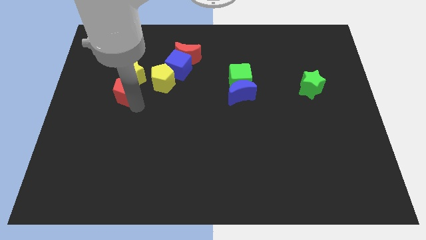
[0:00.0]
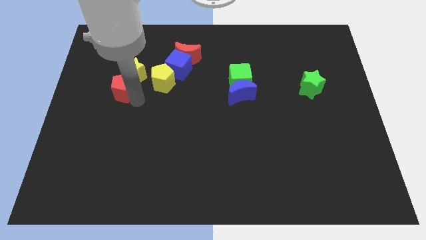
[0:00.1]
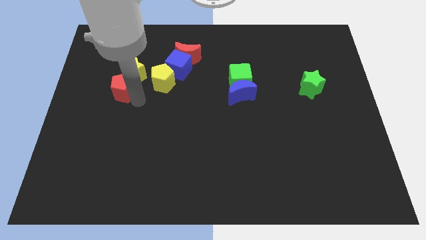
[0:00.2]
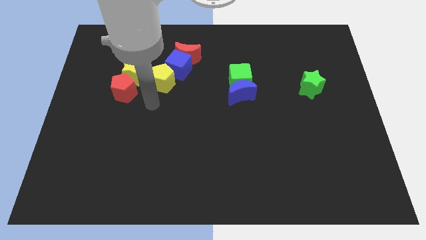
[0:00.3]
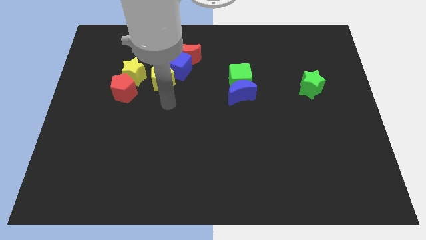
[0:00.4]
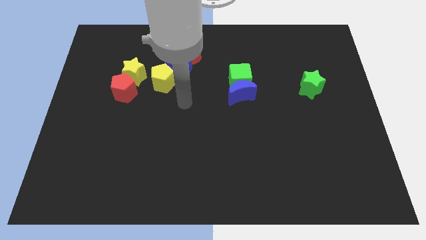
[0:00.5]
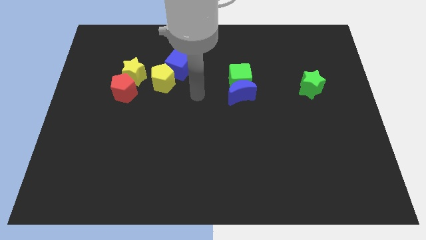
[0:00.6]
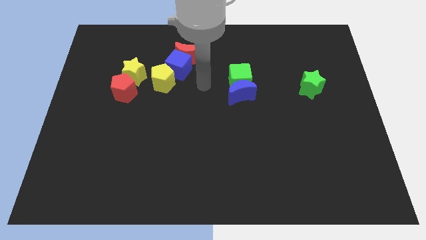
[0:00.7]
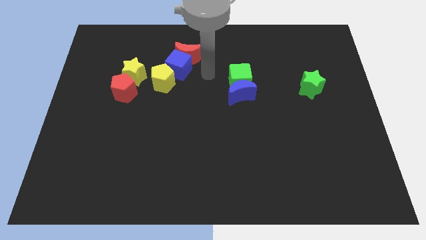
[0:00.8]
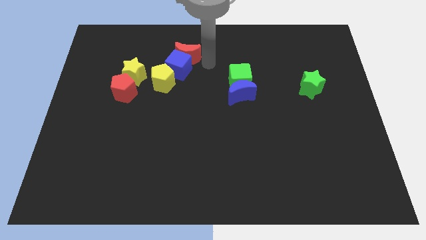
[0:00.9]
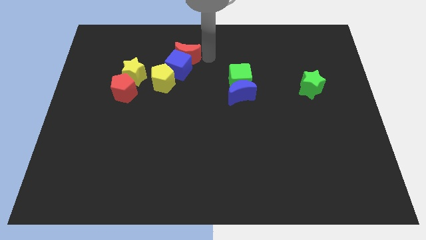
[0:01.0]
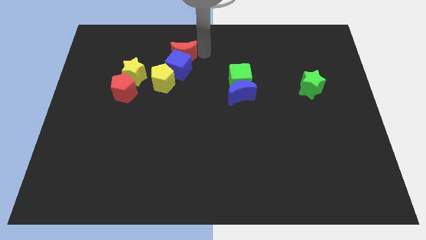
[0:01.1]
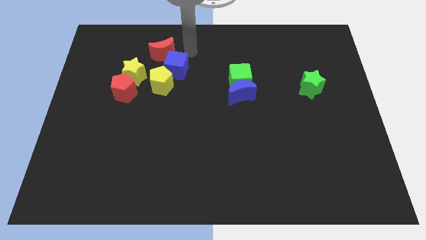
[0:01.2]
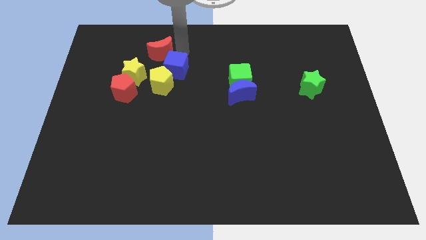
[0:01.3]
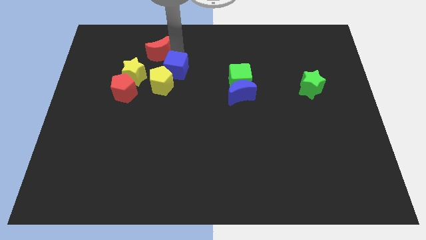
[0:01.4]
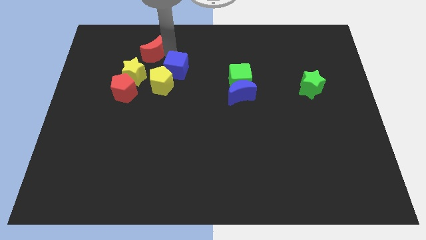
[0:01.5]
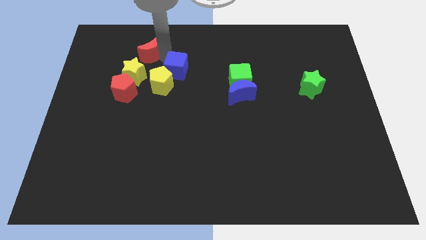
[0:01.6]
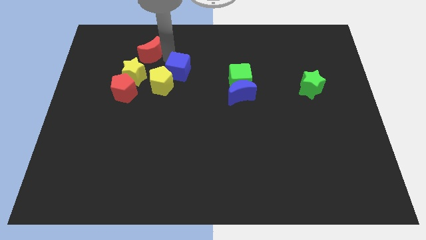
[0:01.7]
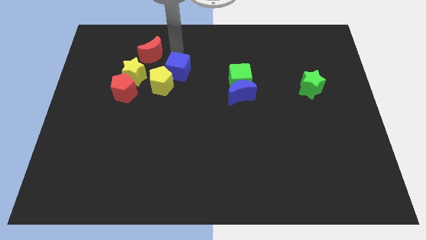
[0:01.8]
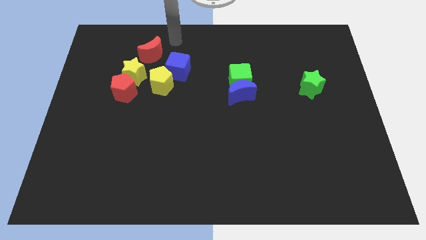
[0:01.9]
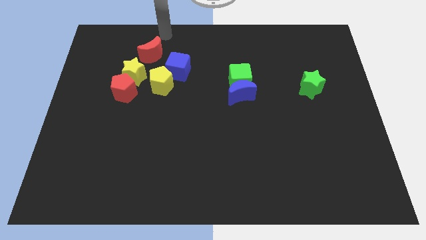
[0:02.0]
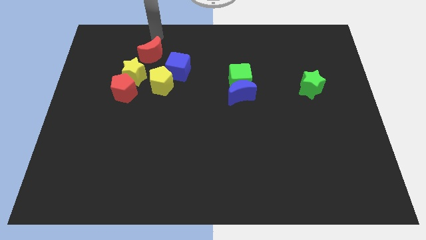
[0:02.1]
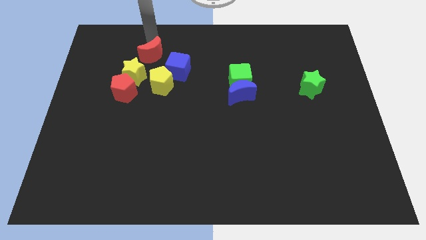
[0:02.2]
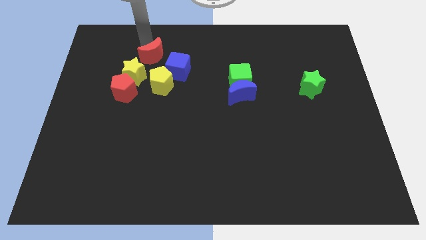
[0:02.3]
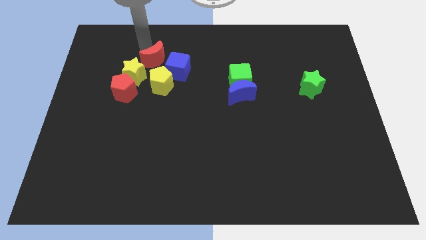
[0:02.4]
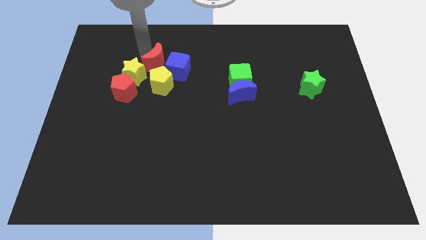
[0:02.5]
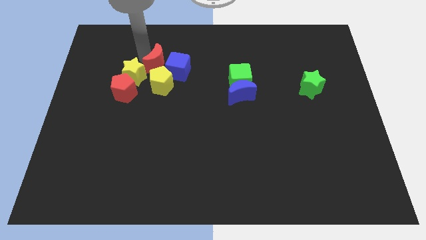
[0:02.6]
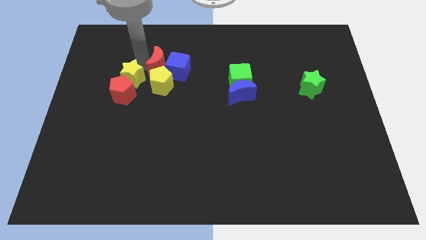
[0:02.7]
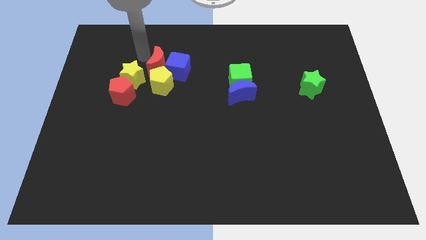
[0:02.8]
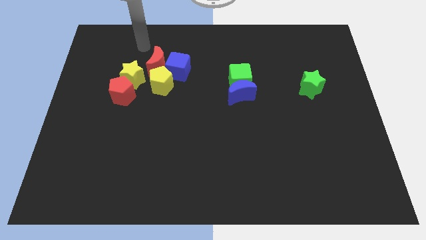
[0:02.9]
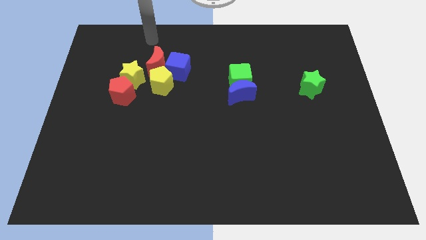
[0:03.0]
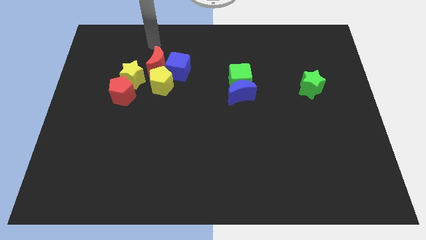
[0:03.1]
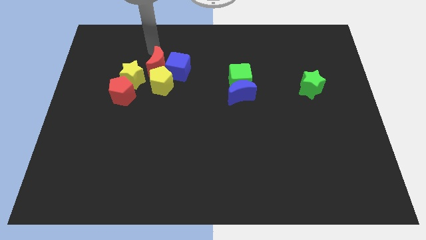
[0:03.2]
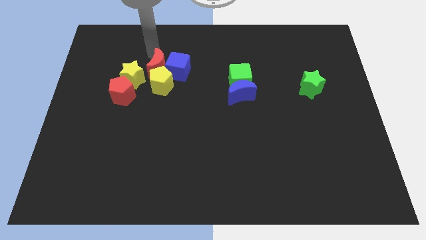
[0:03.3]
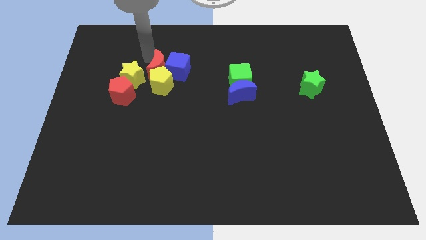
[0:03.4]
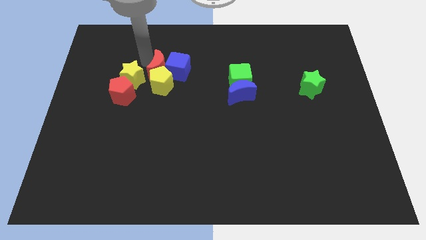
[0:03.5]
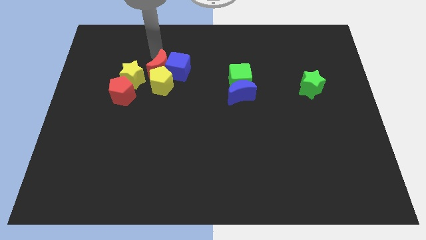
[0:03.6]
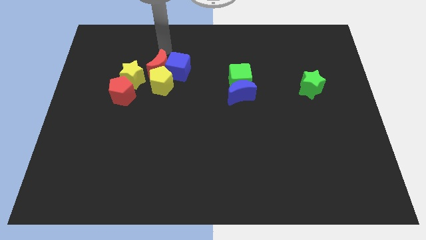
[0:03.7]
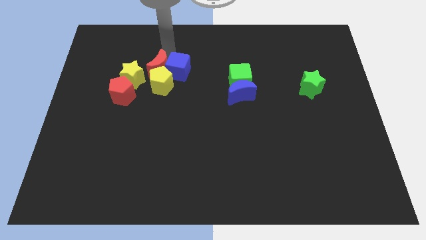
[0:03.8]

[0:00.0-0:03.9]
separate the red crescent from the blue cube

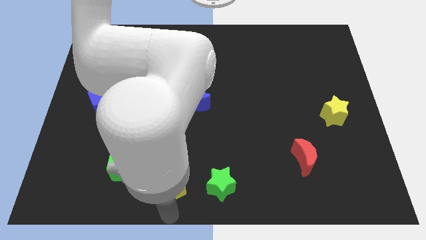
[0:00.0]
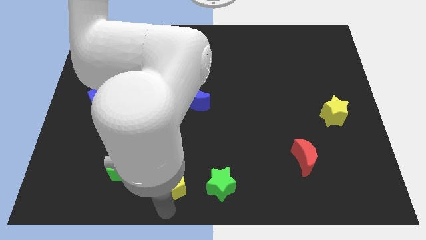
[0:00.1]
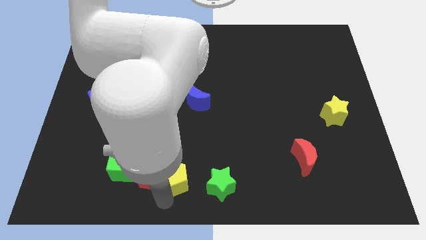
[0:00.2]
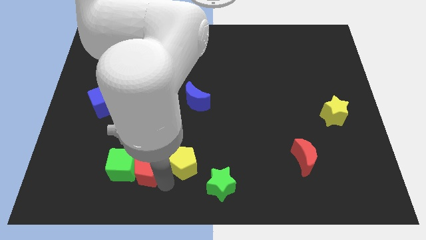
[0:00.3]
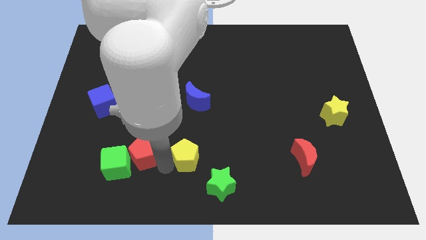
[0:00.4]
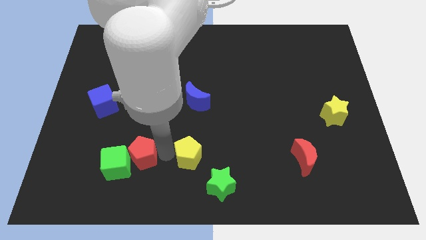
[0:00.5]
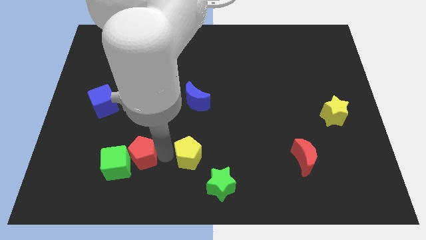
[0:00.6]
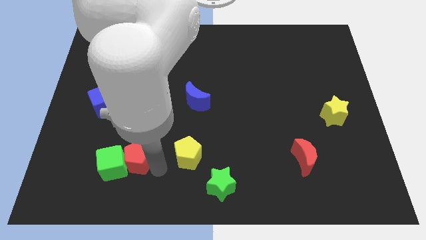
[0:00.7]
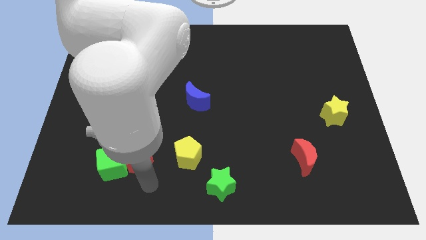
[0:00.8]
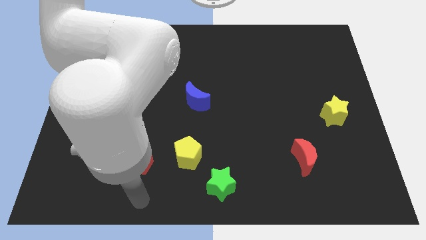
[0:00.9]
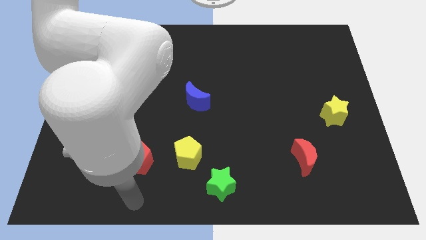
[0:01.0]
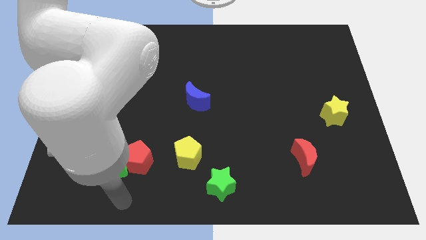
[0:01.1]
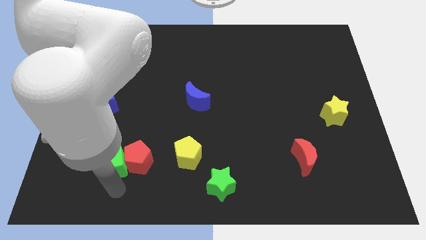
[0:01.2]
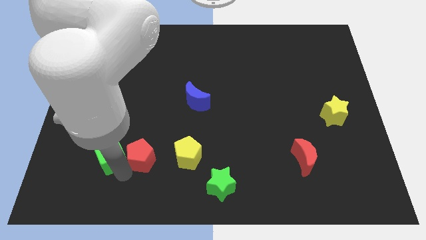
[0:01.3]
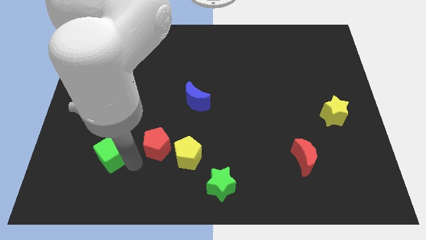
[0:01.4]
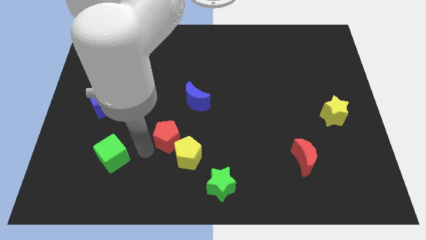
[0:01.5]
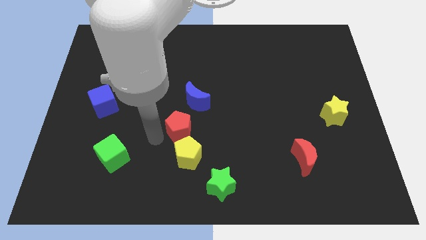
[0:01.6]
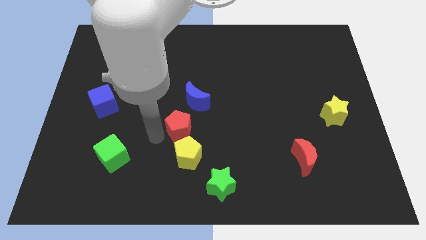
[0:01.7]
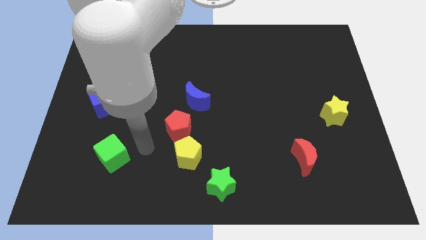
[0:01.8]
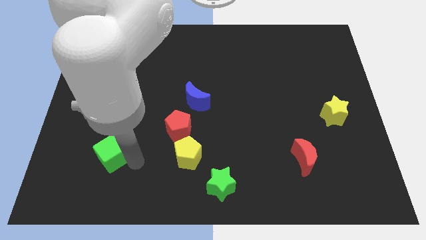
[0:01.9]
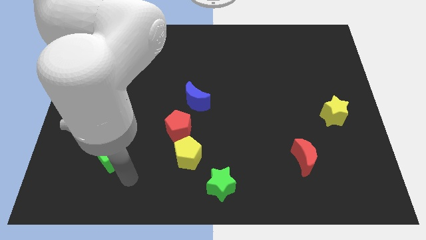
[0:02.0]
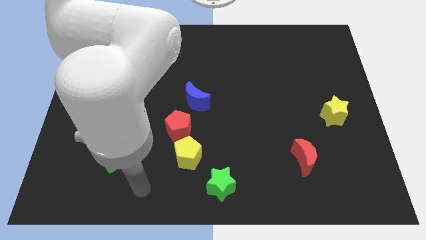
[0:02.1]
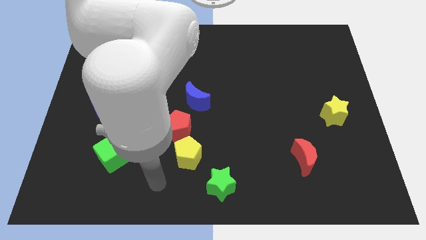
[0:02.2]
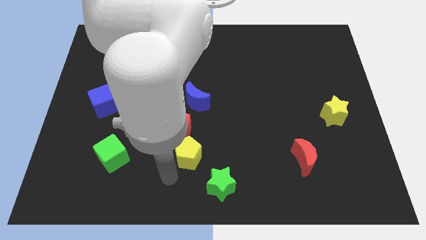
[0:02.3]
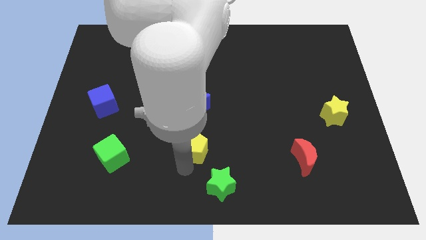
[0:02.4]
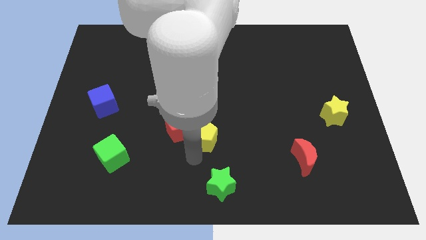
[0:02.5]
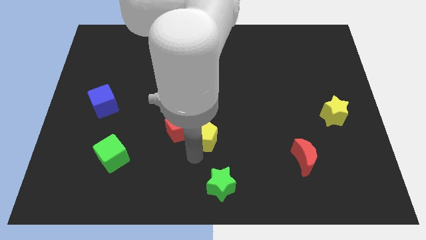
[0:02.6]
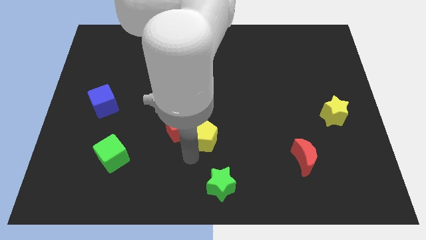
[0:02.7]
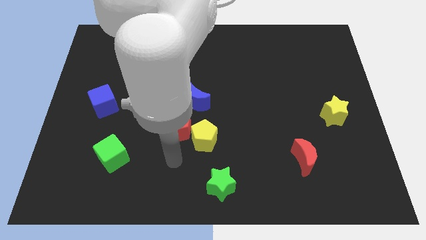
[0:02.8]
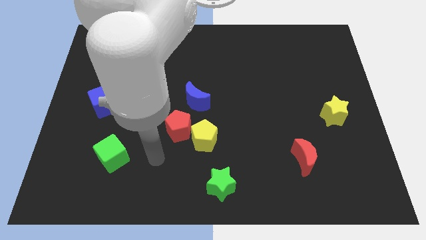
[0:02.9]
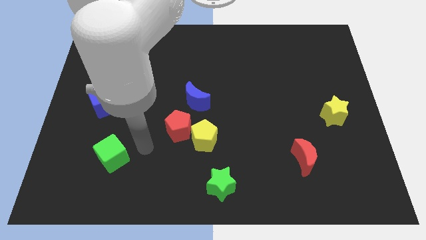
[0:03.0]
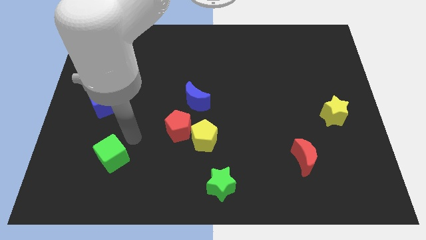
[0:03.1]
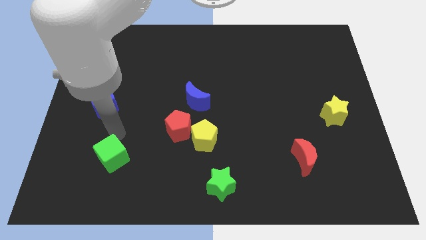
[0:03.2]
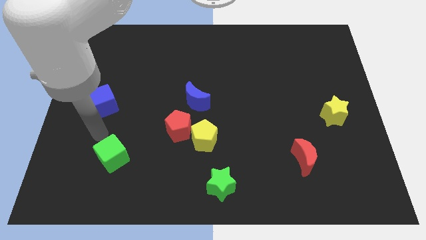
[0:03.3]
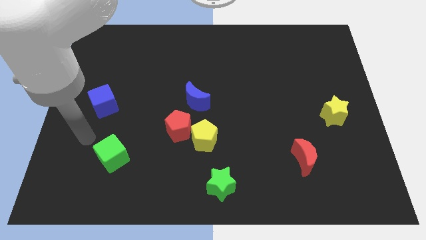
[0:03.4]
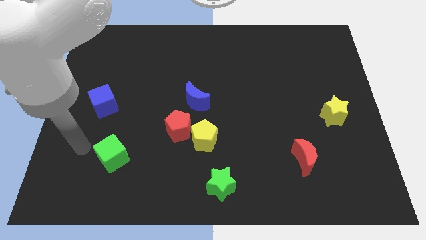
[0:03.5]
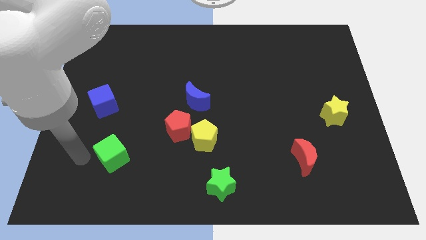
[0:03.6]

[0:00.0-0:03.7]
move the red and yellow pentagon towards the bottom center

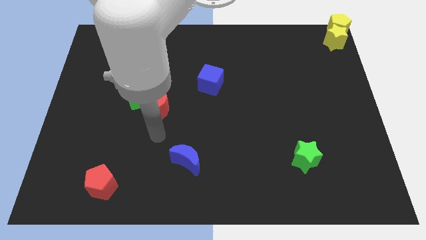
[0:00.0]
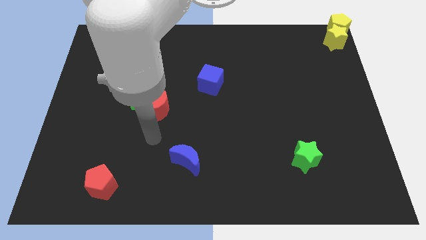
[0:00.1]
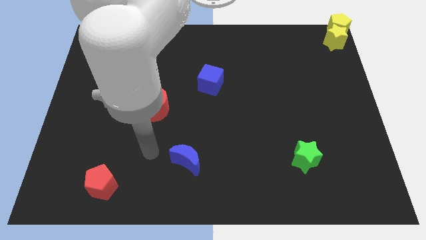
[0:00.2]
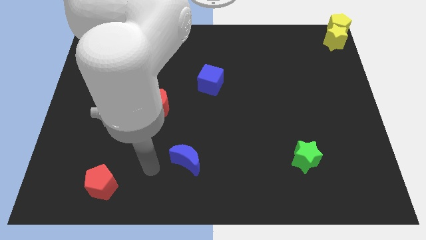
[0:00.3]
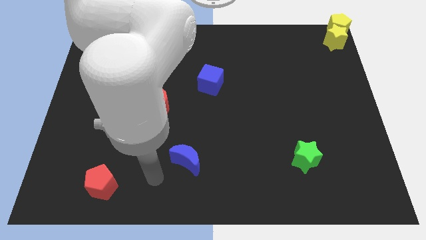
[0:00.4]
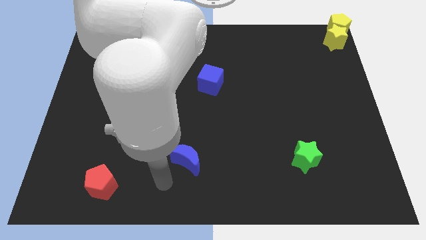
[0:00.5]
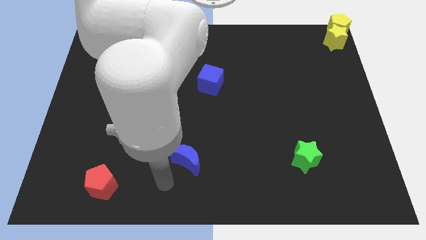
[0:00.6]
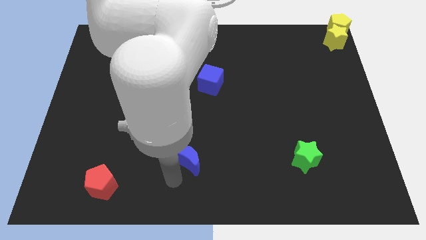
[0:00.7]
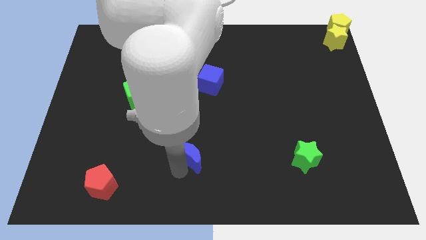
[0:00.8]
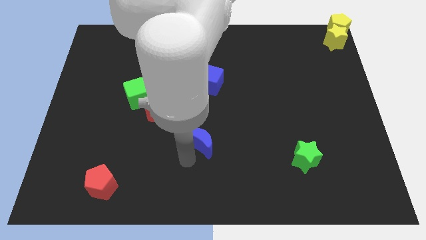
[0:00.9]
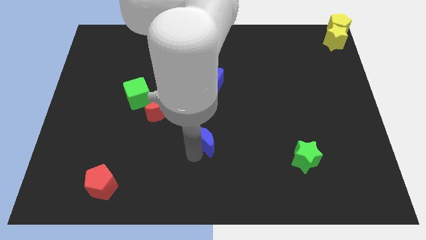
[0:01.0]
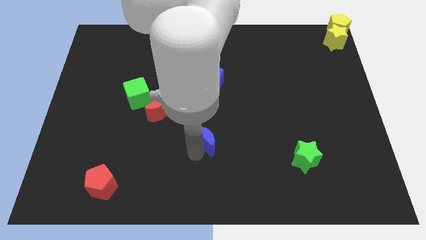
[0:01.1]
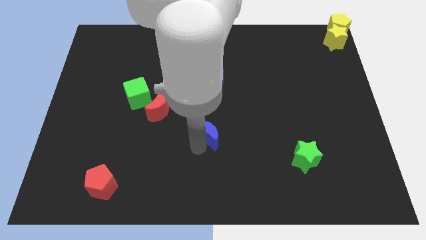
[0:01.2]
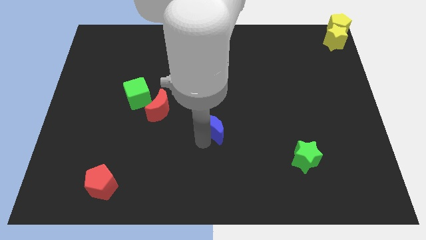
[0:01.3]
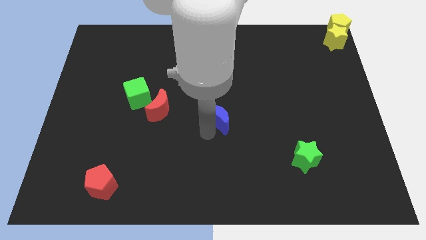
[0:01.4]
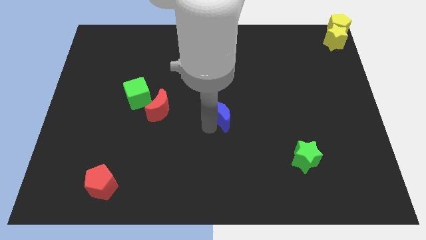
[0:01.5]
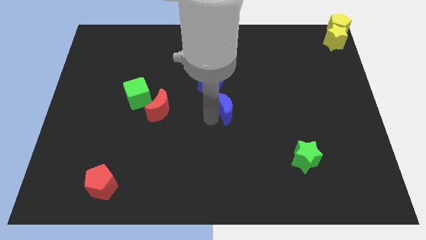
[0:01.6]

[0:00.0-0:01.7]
move the blue crescent to the center of the board
